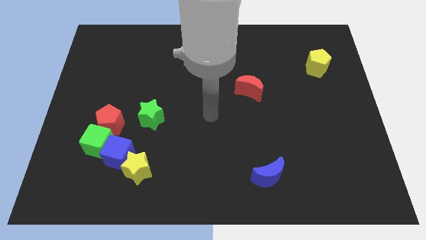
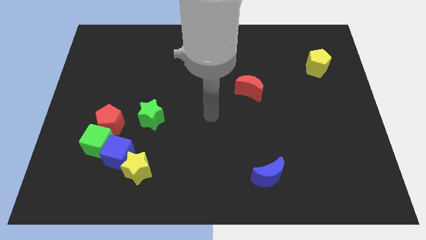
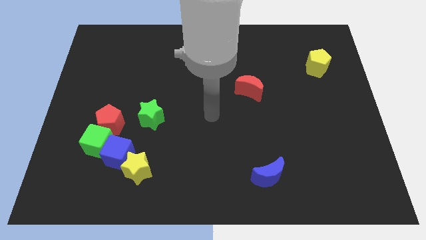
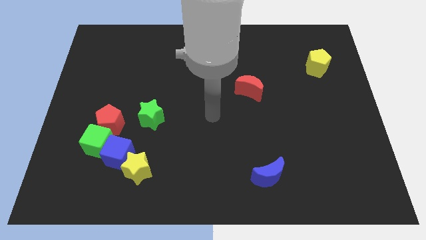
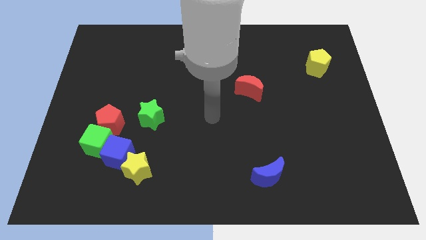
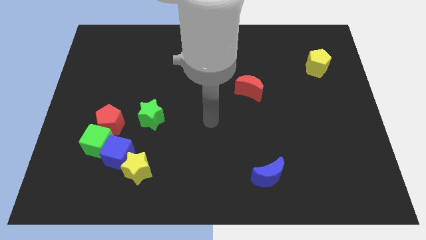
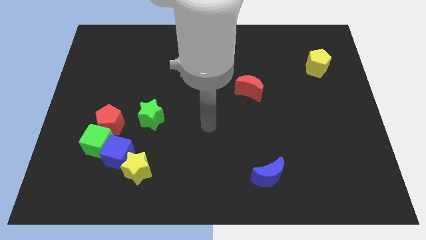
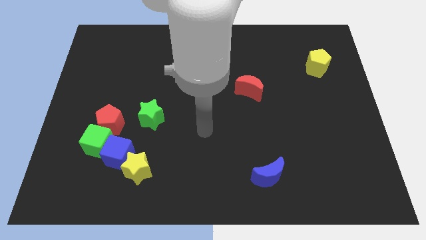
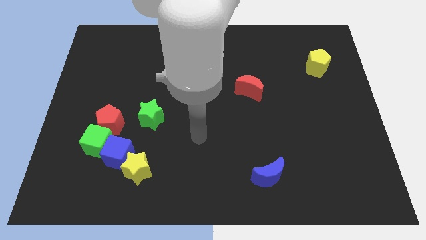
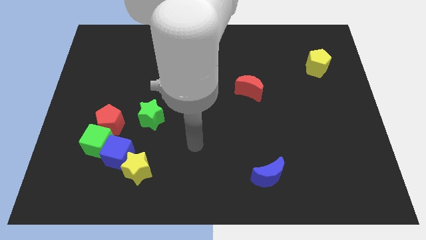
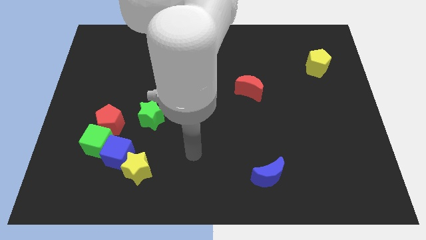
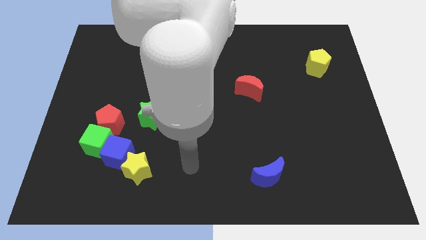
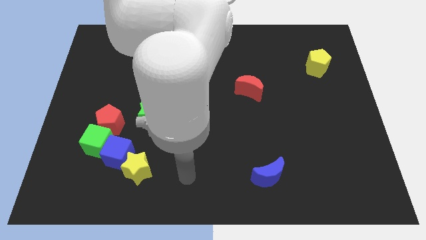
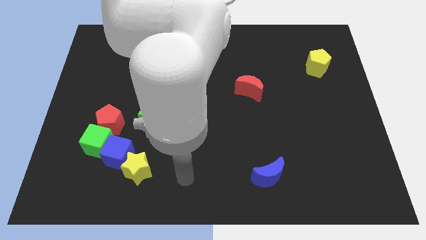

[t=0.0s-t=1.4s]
point your arm at the right of the yellow star

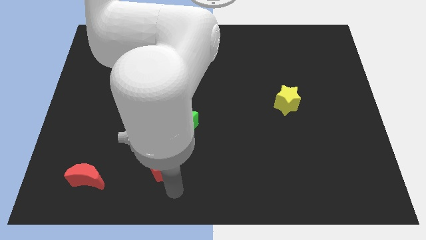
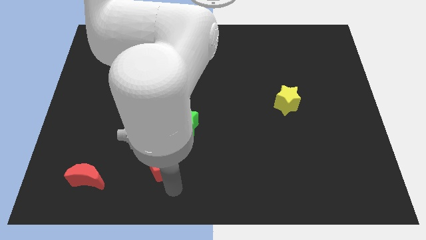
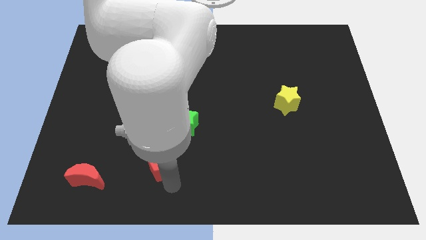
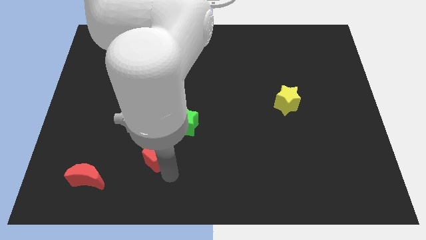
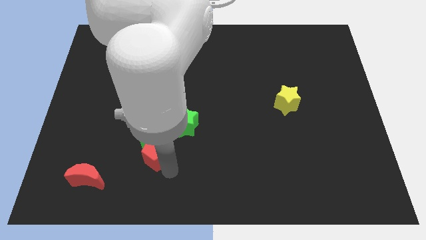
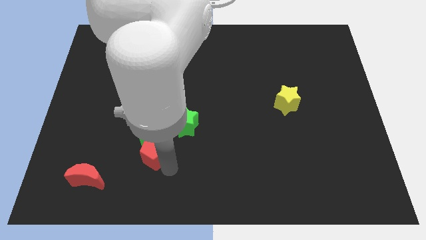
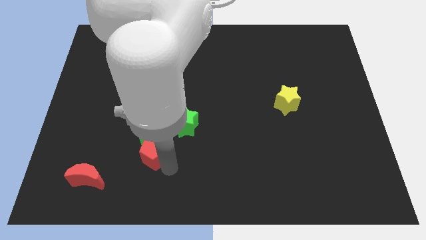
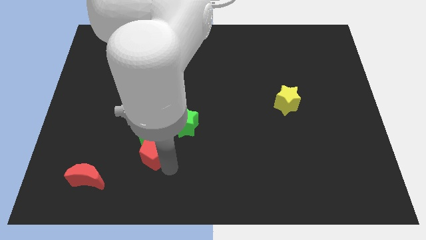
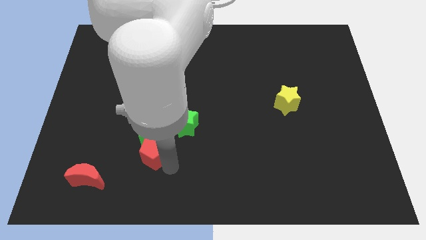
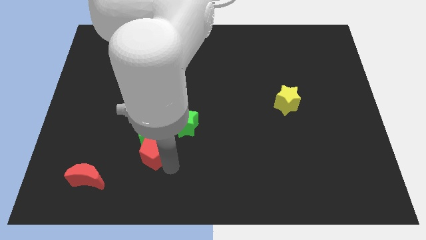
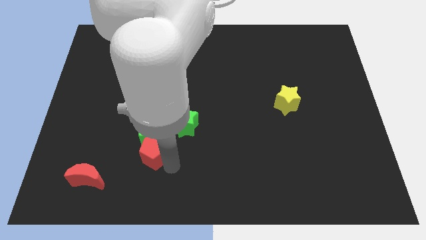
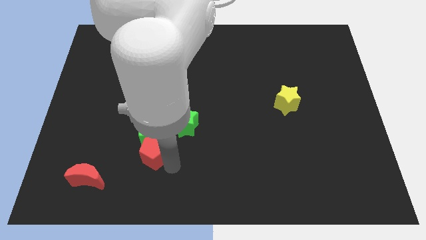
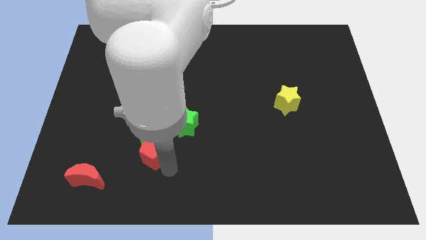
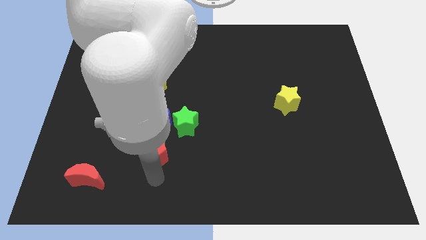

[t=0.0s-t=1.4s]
move red pentagon slightly up

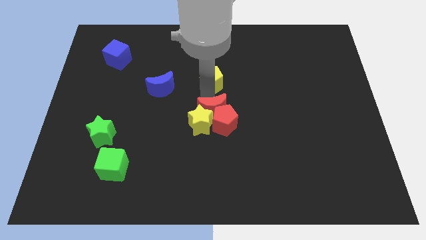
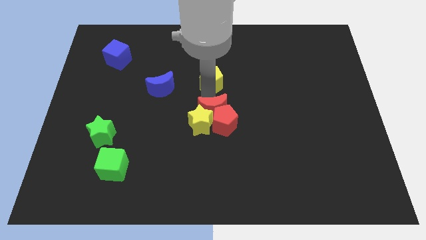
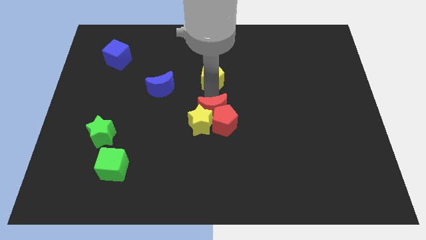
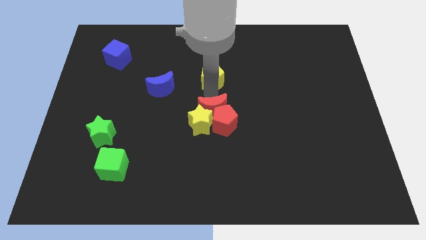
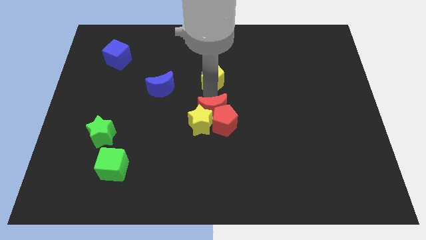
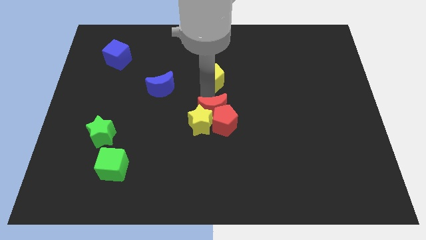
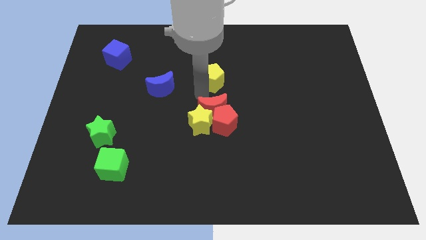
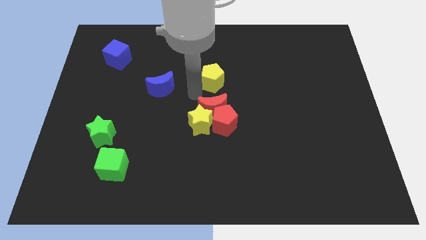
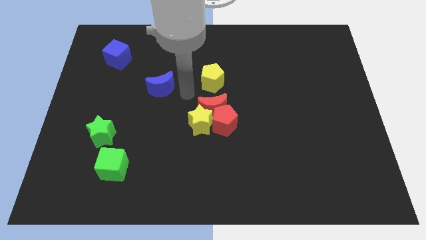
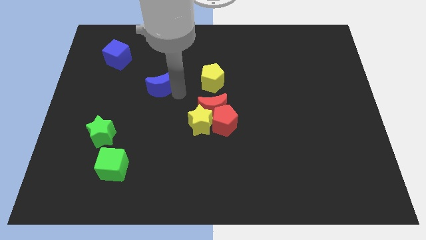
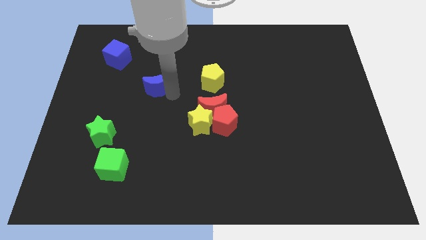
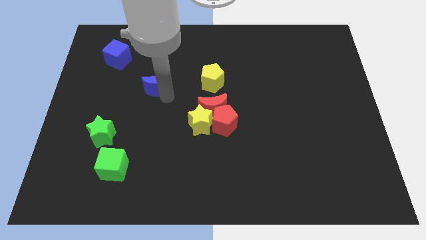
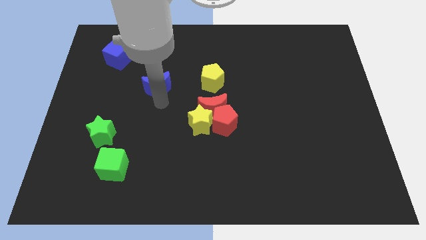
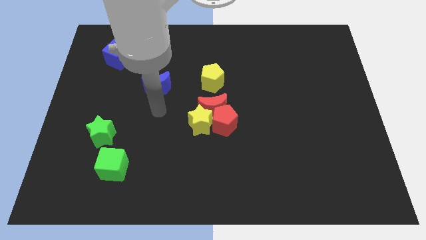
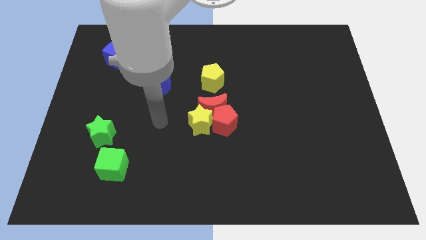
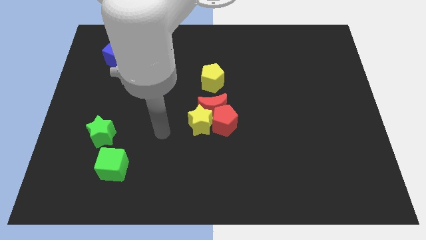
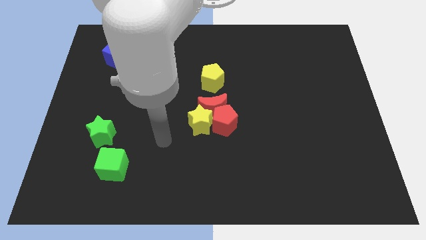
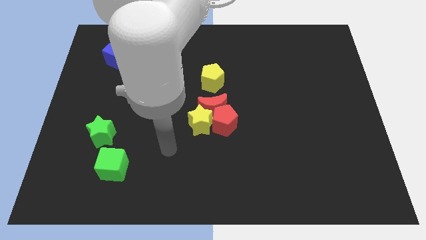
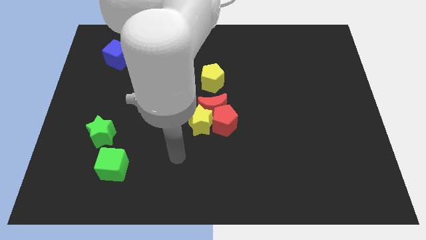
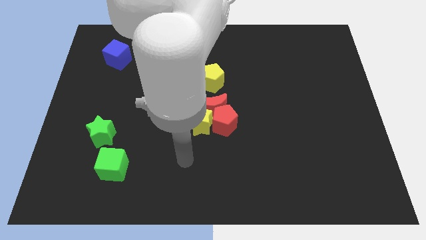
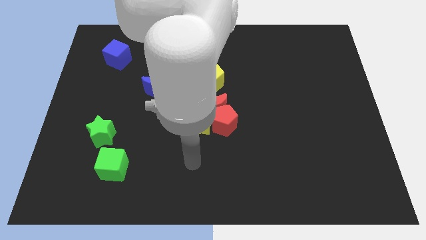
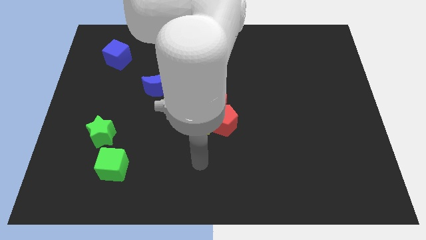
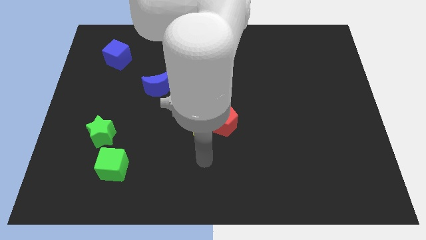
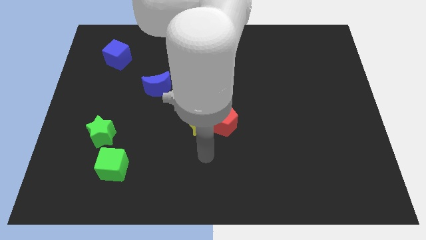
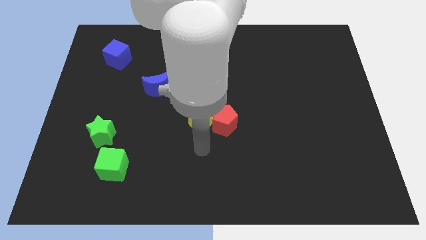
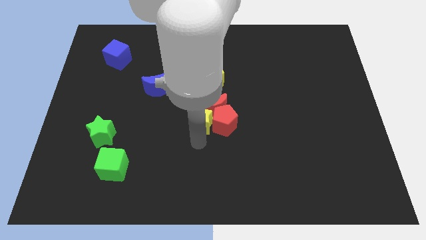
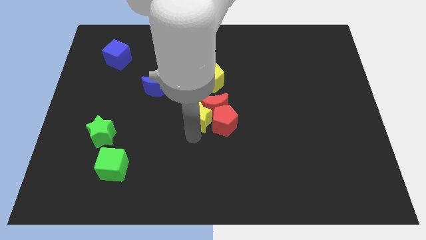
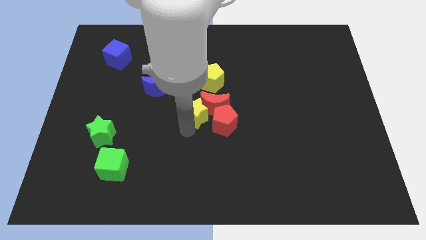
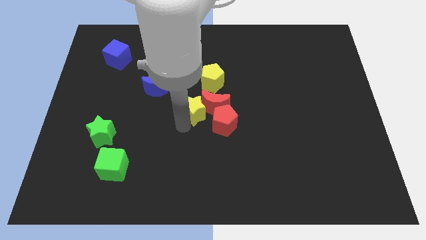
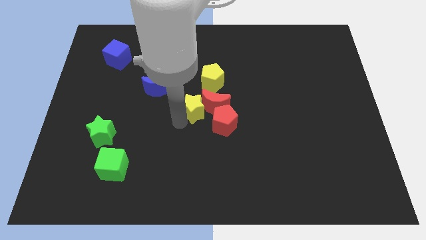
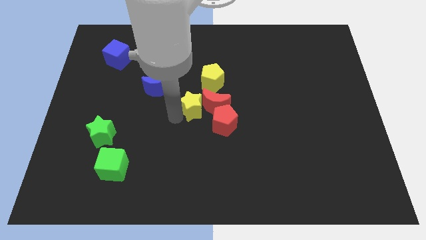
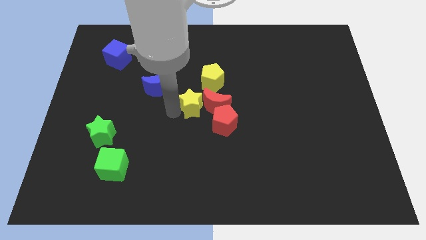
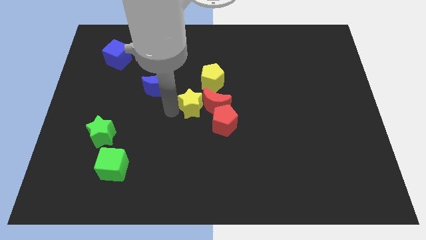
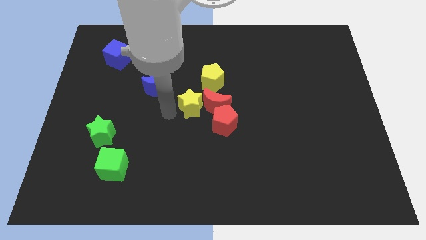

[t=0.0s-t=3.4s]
place the yellow star left to the red crescent

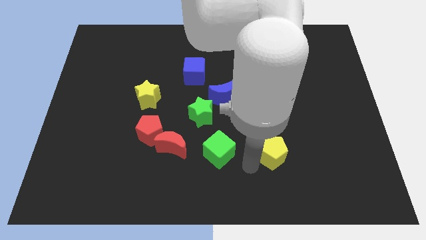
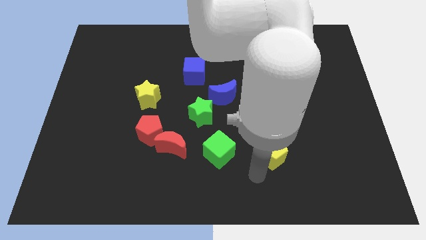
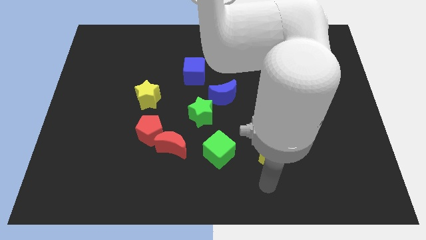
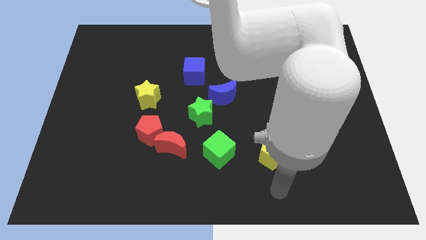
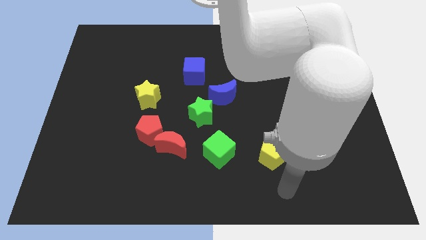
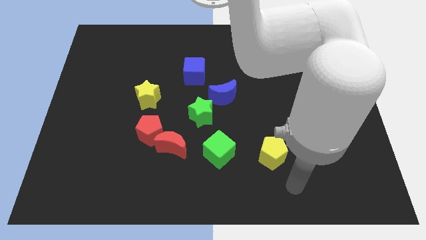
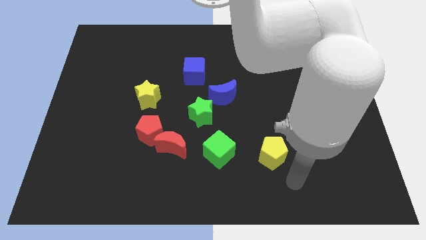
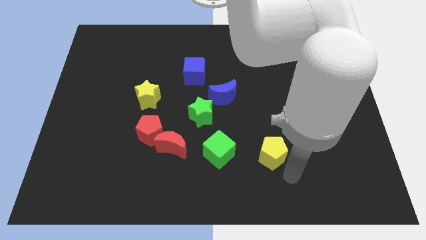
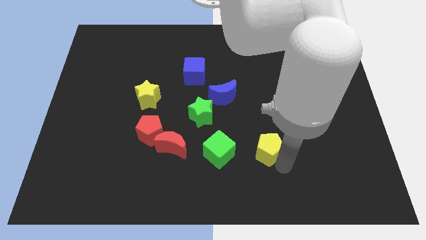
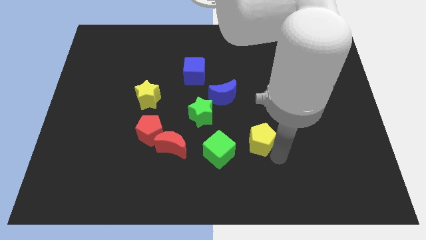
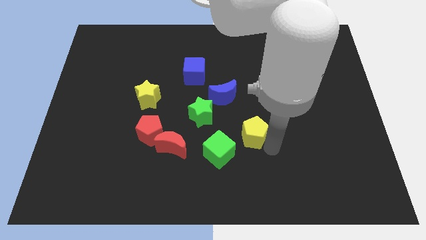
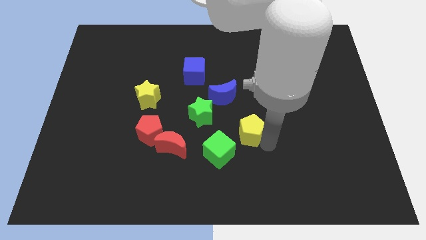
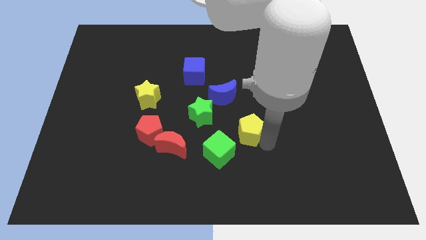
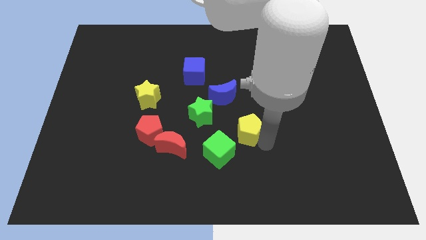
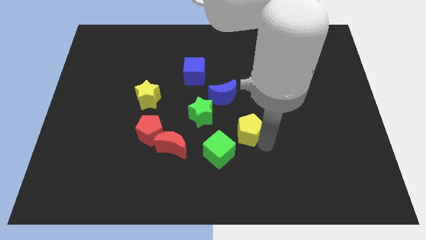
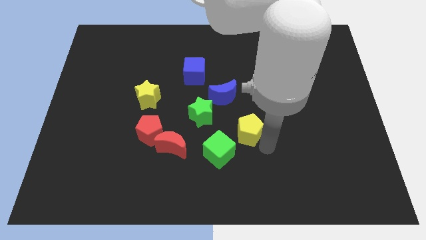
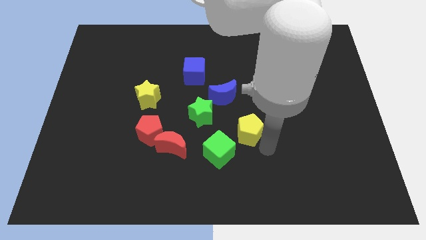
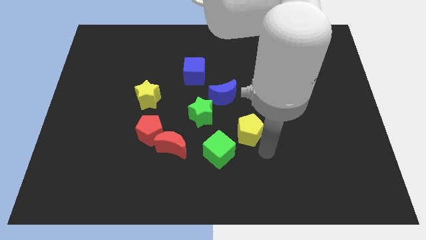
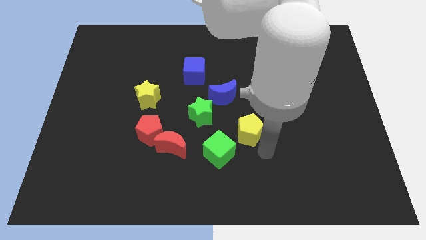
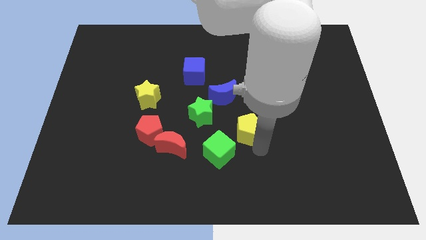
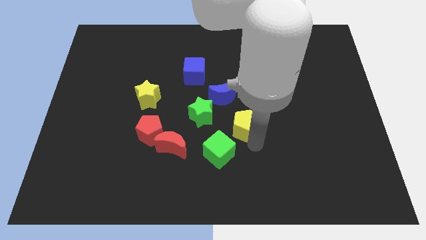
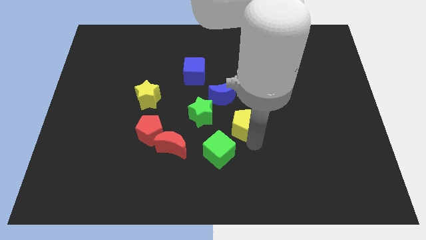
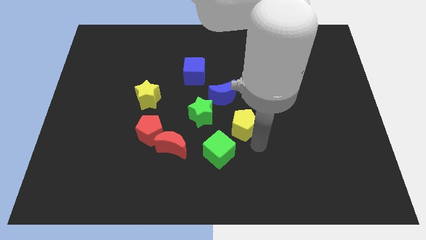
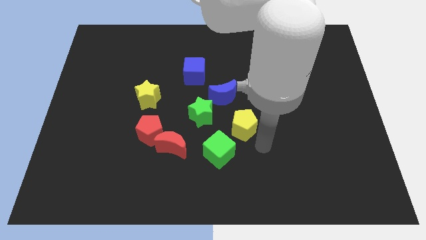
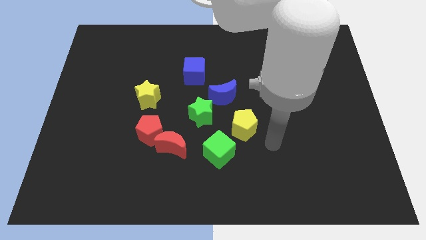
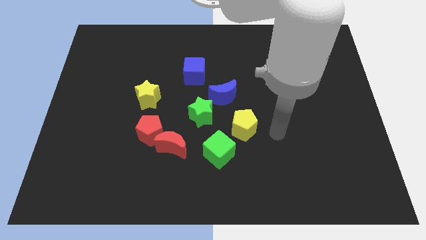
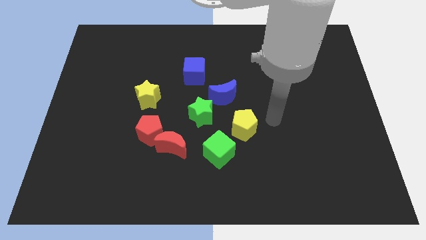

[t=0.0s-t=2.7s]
place the yellow pentagon diagonally top right to green cube
